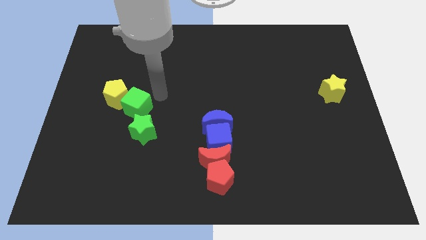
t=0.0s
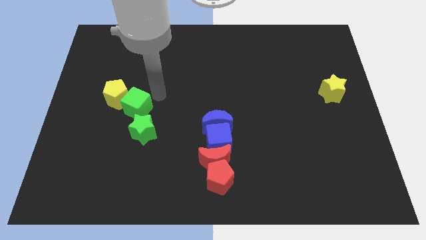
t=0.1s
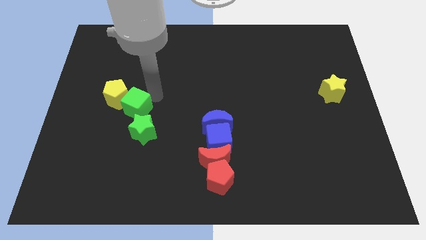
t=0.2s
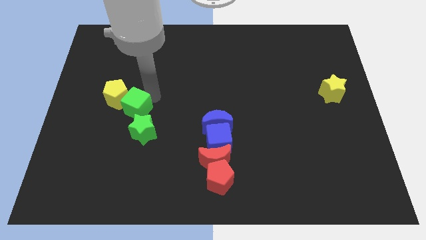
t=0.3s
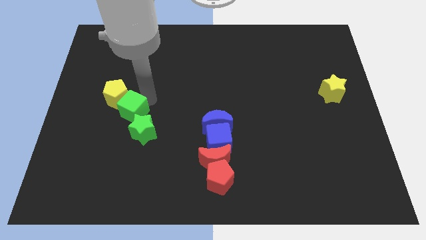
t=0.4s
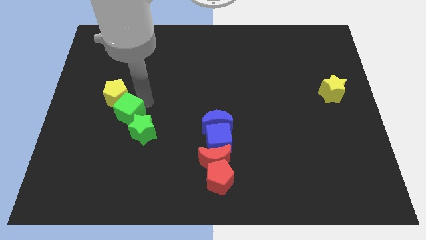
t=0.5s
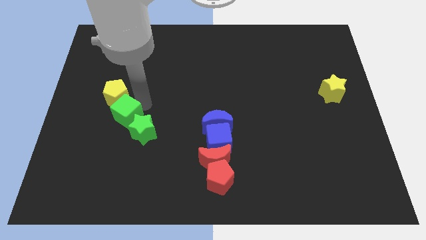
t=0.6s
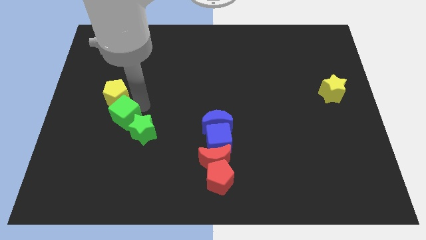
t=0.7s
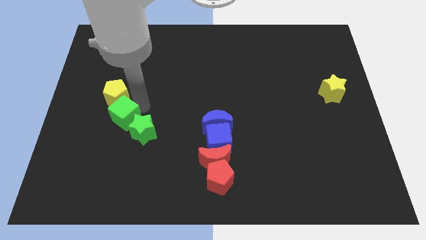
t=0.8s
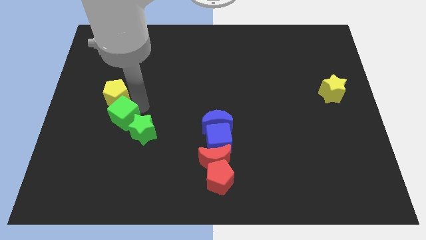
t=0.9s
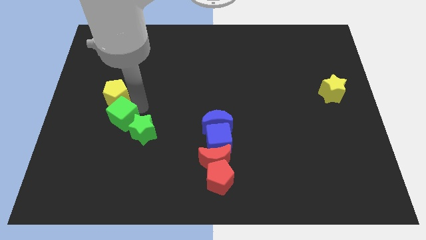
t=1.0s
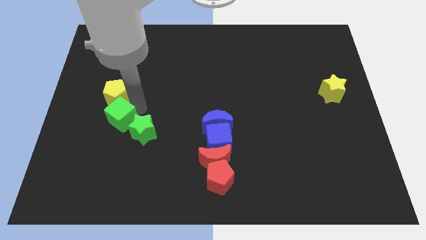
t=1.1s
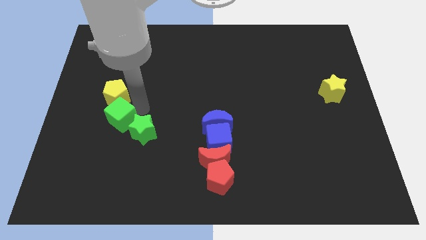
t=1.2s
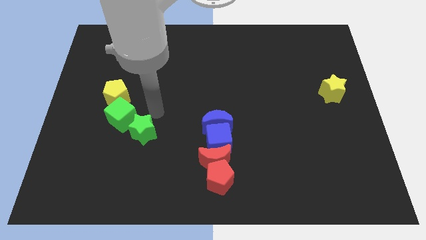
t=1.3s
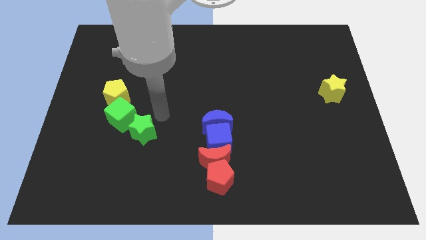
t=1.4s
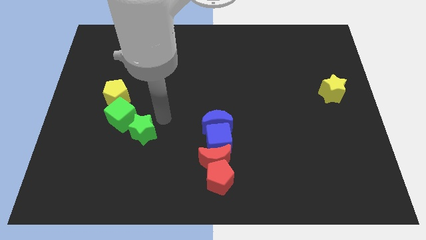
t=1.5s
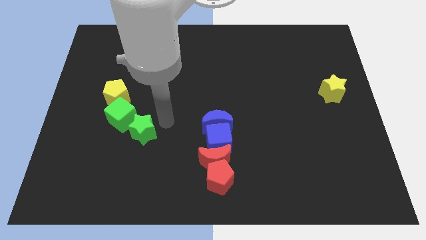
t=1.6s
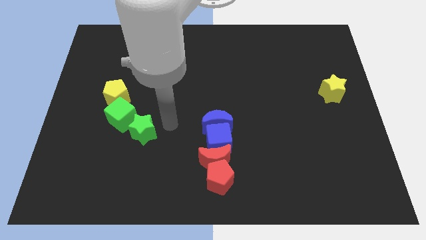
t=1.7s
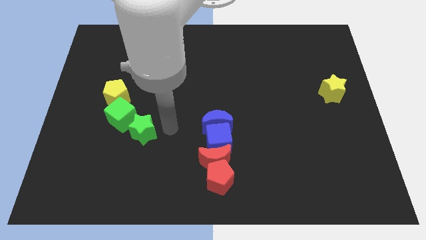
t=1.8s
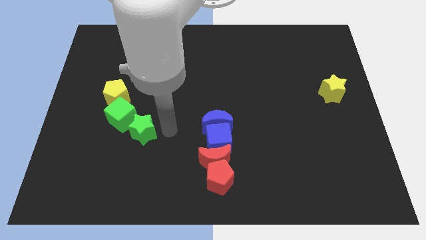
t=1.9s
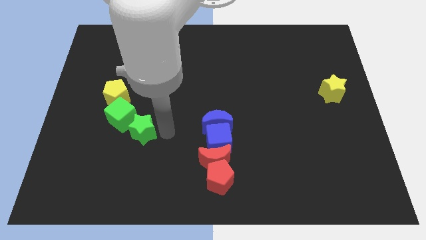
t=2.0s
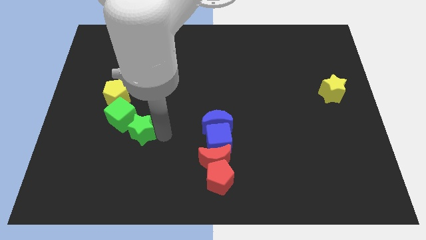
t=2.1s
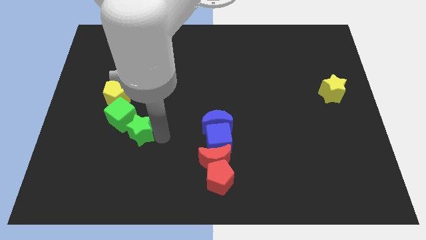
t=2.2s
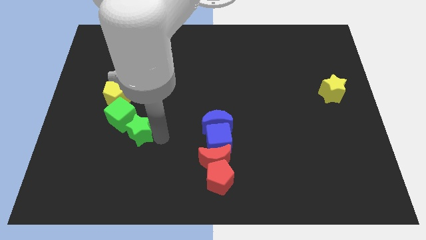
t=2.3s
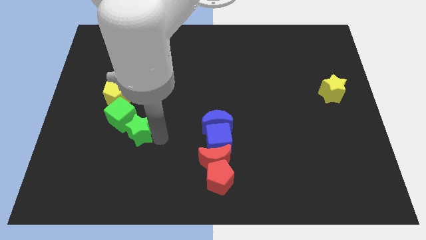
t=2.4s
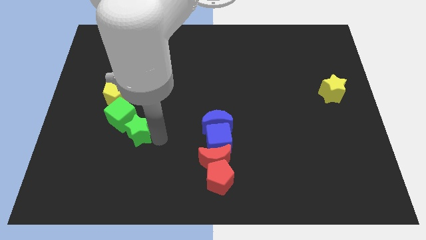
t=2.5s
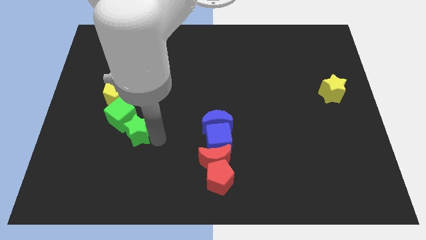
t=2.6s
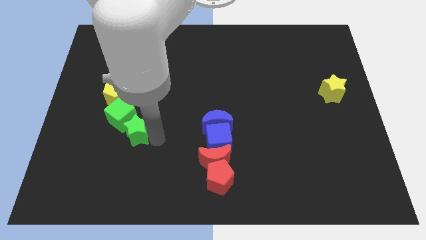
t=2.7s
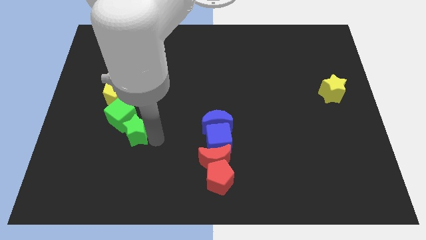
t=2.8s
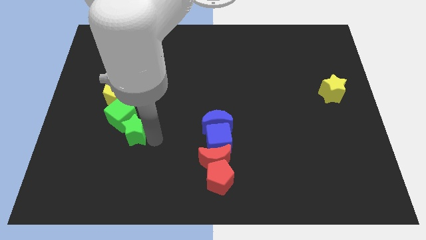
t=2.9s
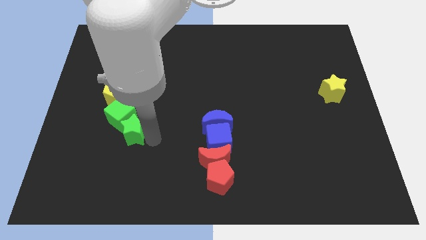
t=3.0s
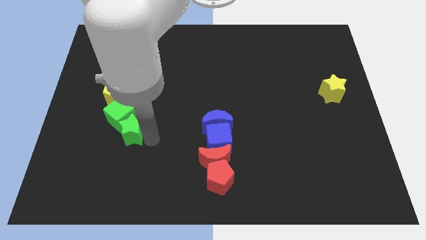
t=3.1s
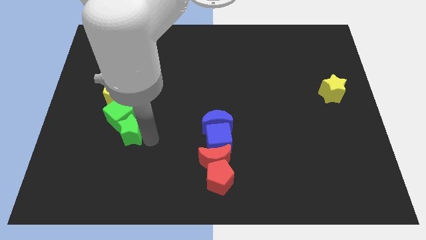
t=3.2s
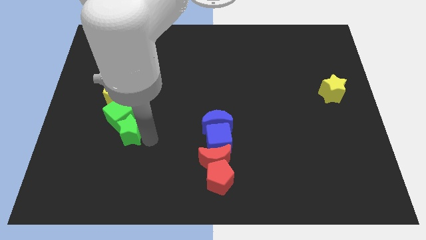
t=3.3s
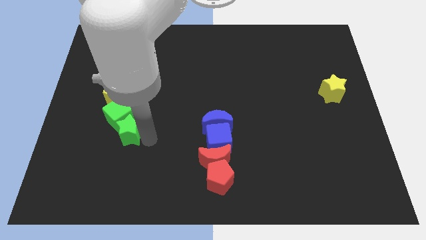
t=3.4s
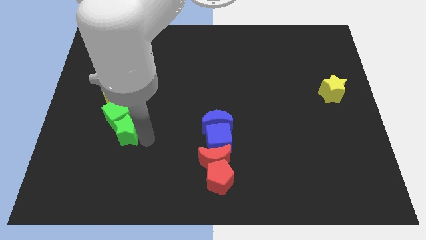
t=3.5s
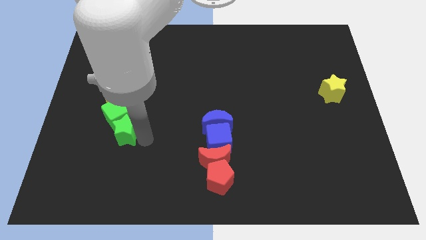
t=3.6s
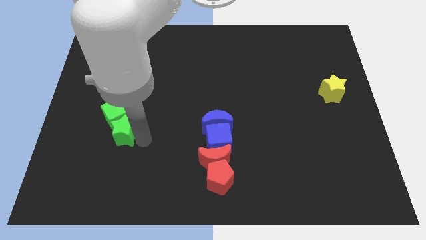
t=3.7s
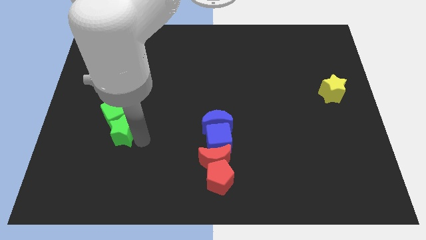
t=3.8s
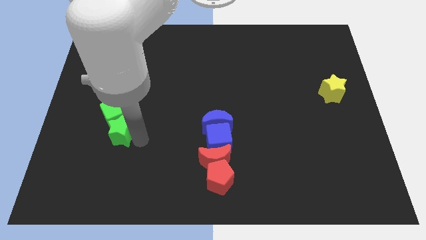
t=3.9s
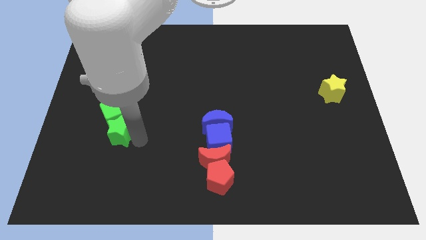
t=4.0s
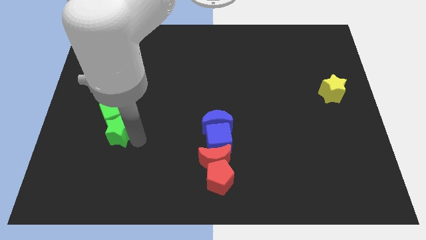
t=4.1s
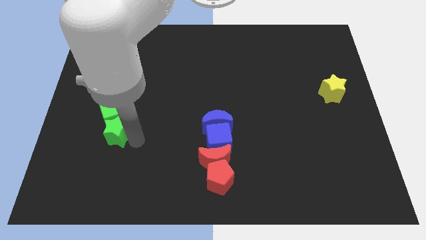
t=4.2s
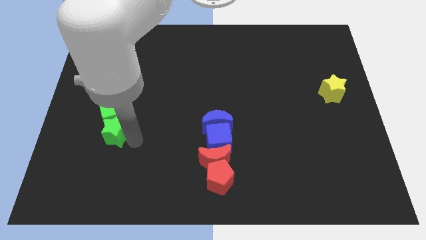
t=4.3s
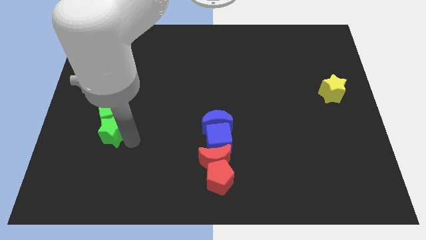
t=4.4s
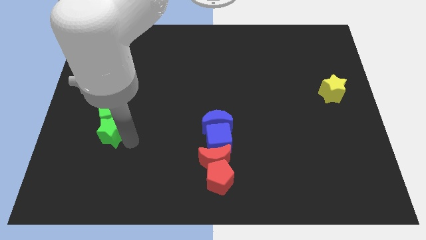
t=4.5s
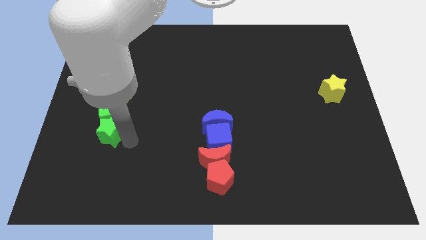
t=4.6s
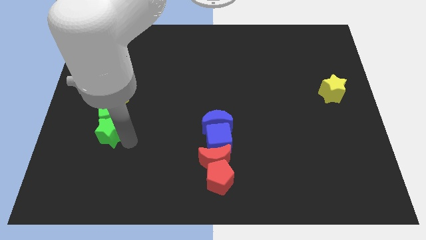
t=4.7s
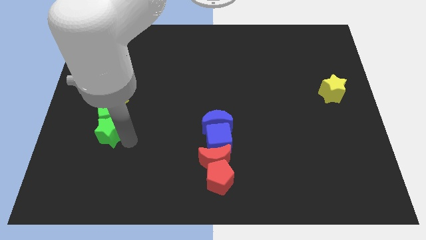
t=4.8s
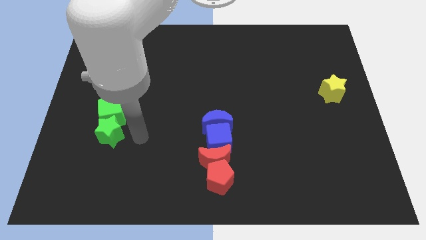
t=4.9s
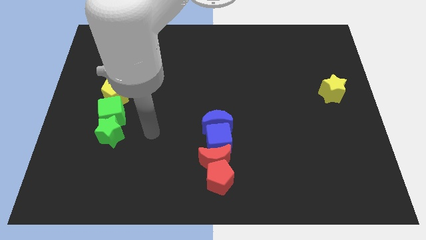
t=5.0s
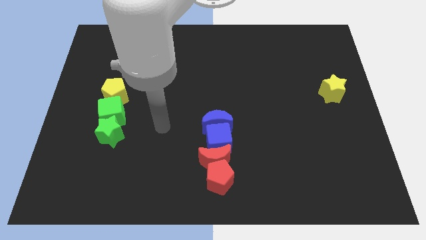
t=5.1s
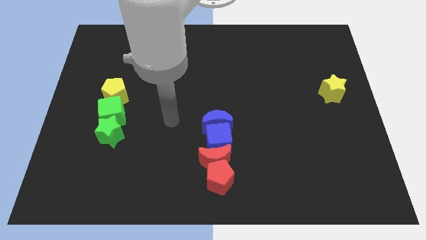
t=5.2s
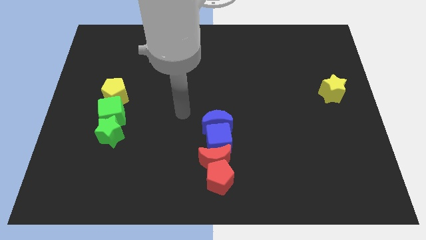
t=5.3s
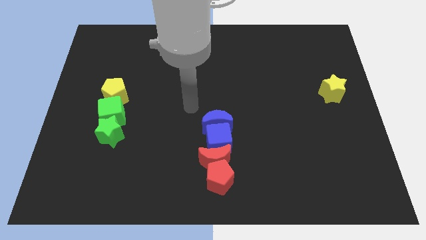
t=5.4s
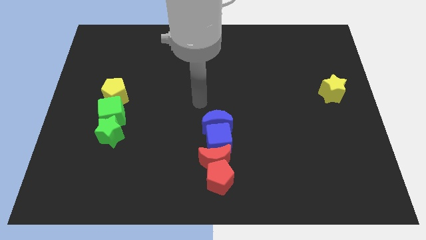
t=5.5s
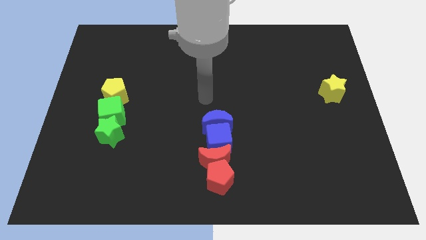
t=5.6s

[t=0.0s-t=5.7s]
place green star to the bottom of the green cube

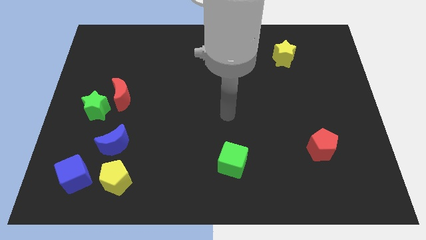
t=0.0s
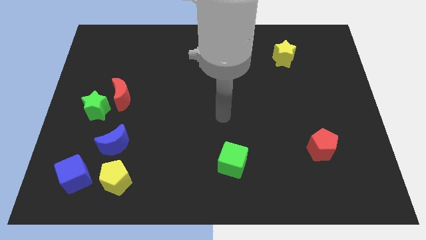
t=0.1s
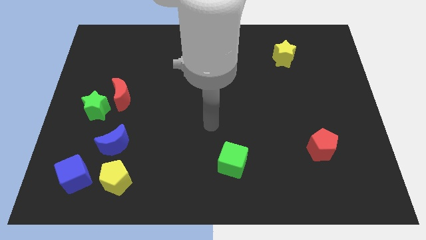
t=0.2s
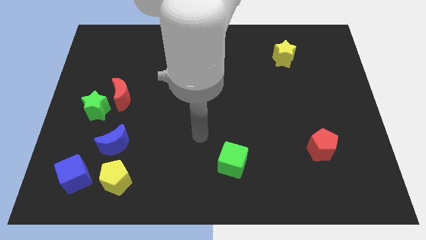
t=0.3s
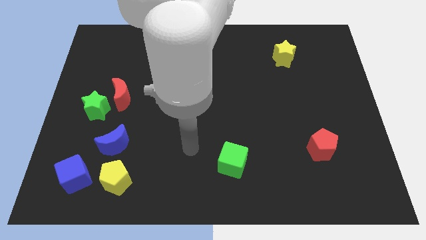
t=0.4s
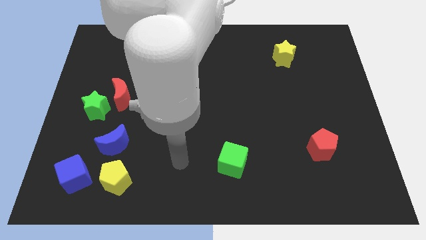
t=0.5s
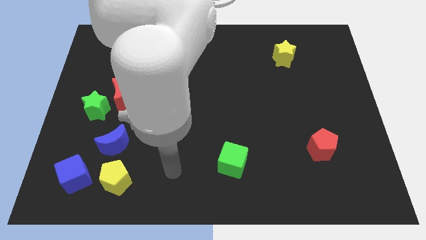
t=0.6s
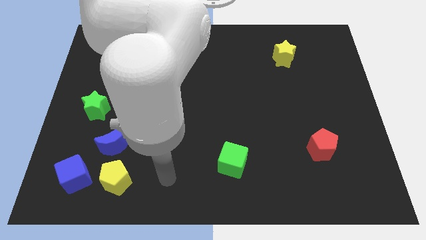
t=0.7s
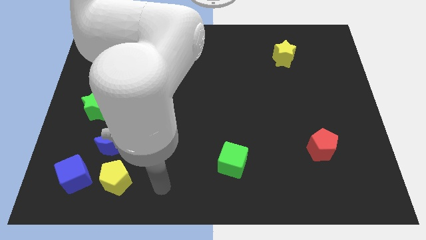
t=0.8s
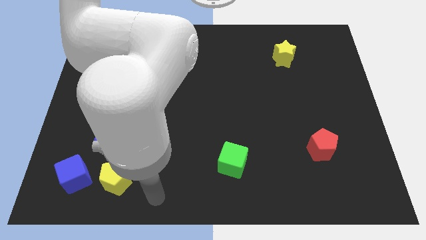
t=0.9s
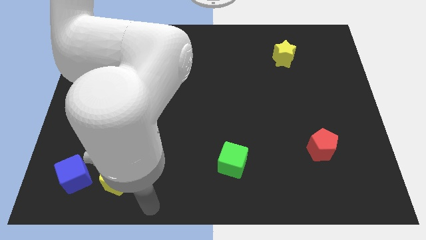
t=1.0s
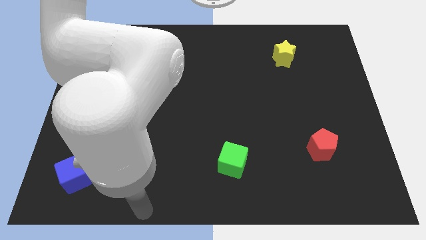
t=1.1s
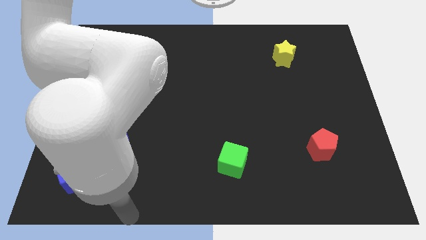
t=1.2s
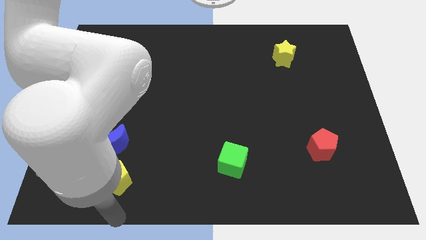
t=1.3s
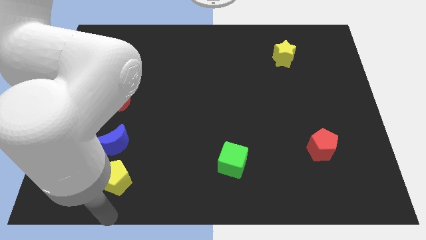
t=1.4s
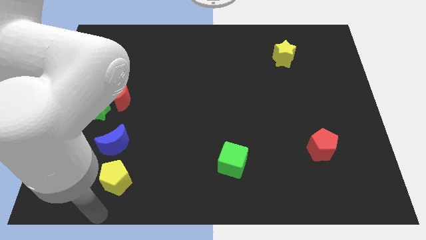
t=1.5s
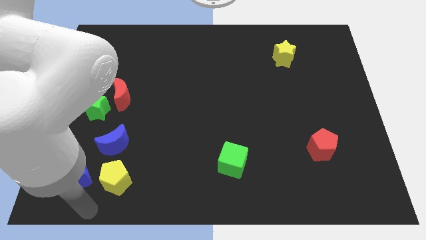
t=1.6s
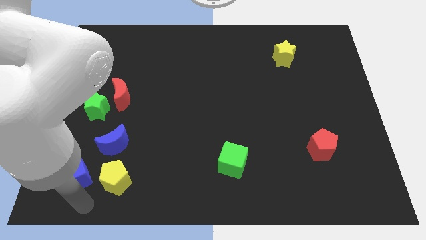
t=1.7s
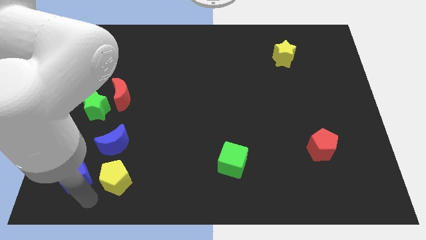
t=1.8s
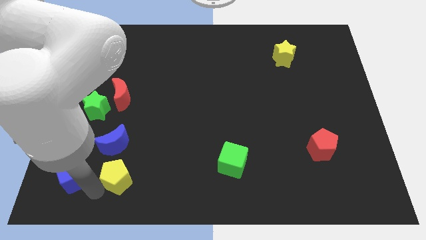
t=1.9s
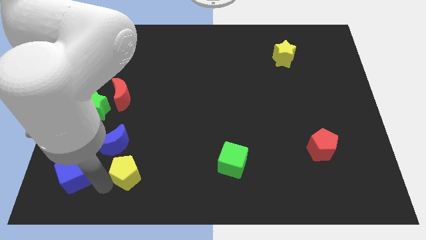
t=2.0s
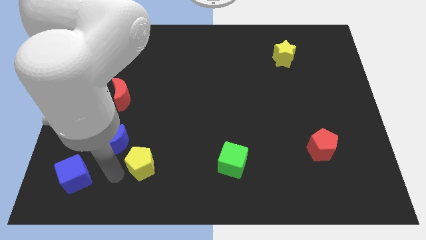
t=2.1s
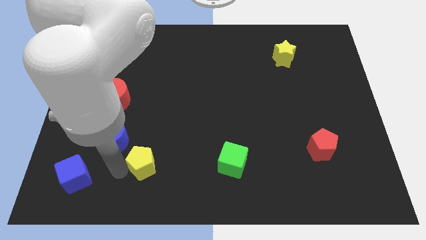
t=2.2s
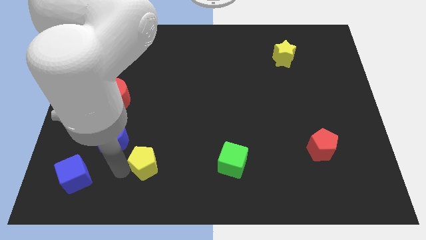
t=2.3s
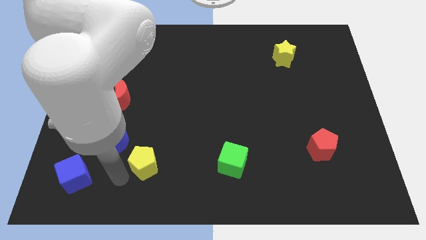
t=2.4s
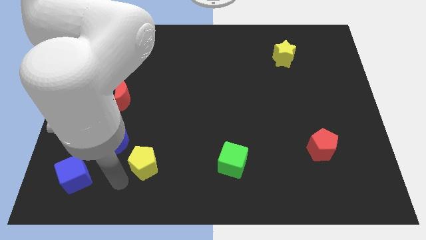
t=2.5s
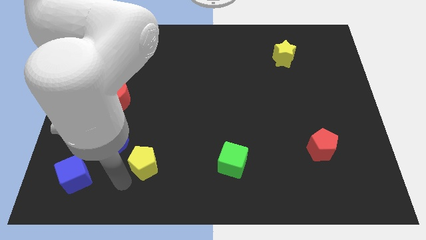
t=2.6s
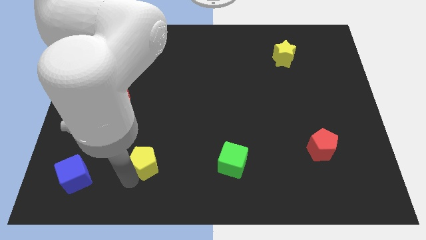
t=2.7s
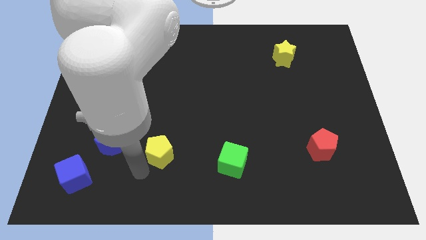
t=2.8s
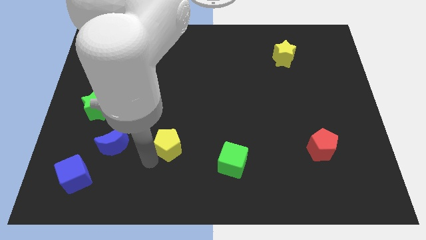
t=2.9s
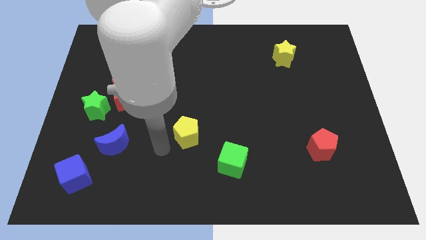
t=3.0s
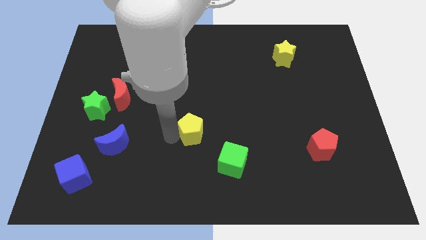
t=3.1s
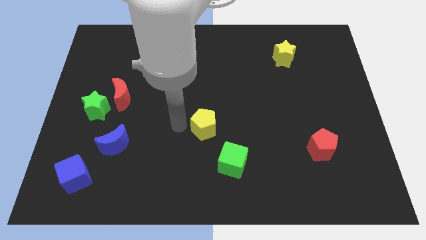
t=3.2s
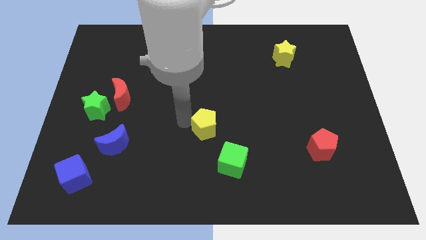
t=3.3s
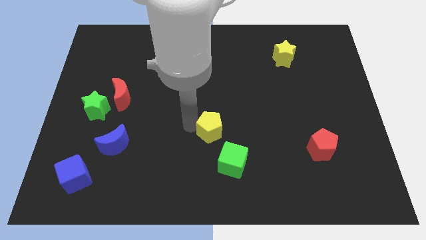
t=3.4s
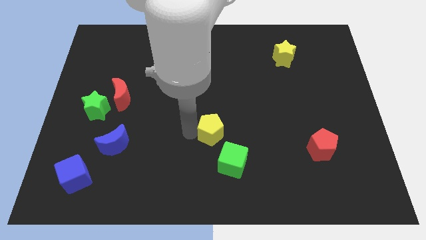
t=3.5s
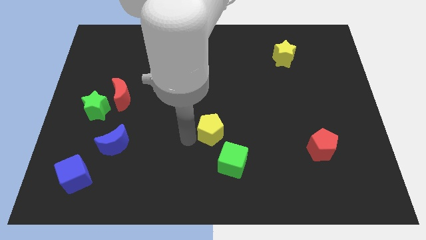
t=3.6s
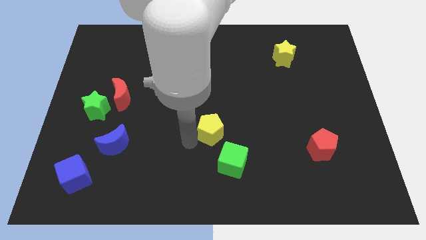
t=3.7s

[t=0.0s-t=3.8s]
place yellow pentagon to the top left of green cube
